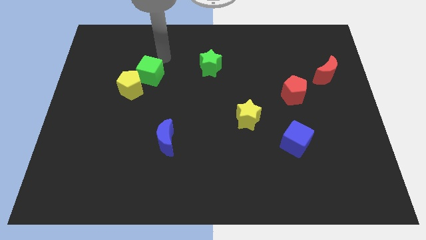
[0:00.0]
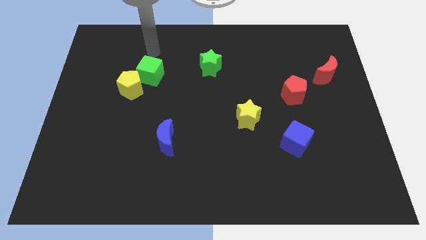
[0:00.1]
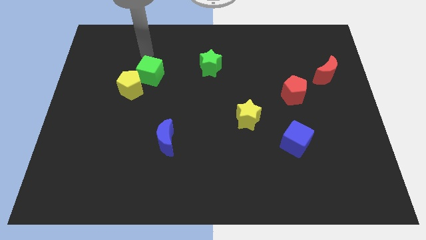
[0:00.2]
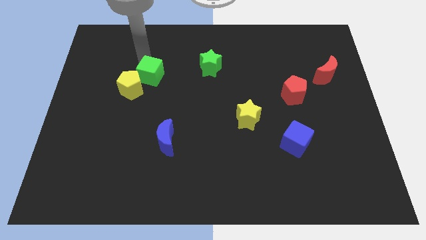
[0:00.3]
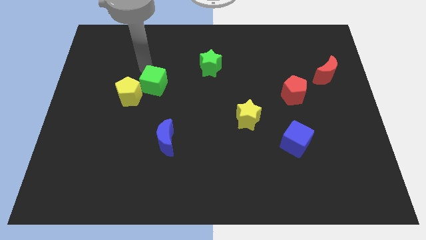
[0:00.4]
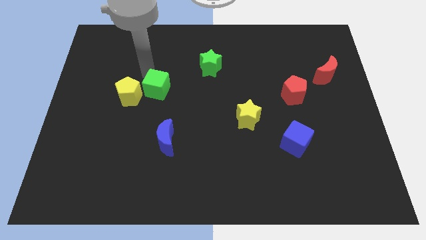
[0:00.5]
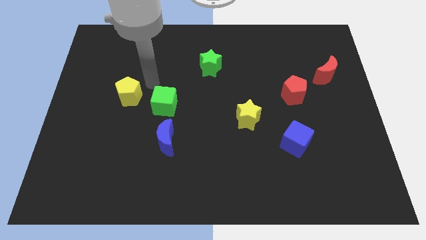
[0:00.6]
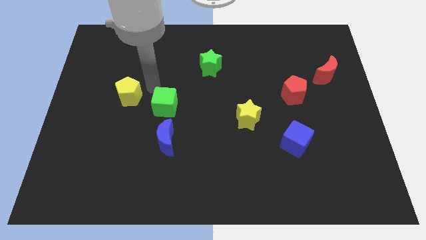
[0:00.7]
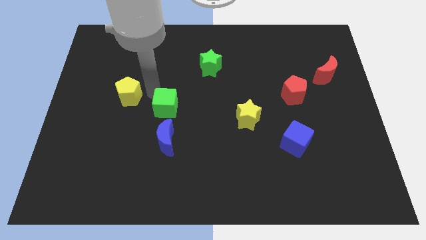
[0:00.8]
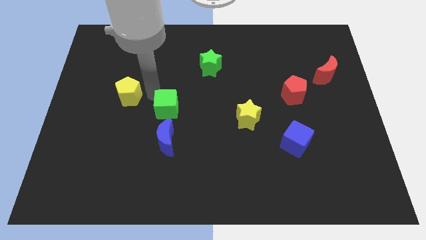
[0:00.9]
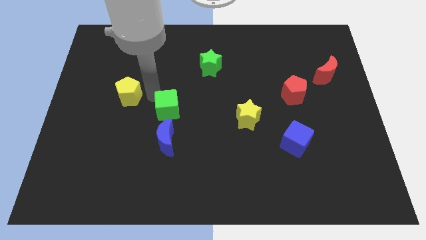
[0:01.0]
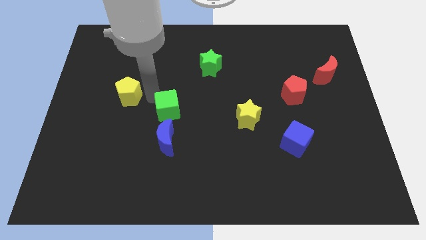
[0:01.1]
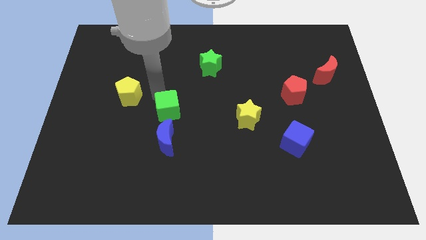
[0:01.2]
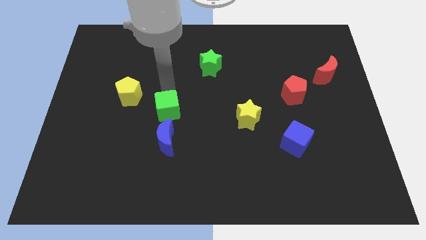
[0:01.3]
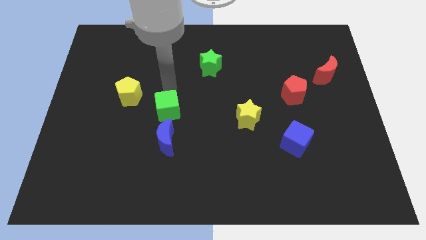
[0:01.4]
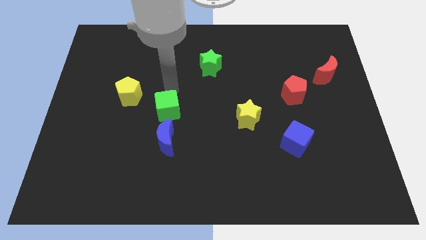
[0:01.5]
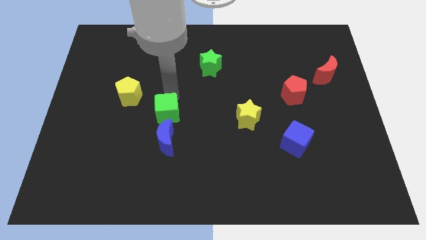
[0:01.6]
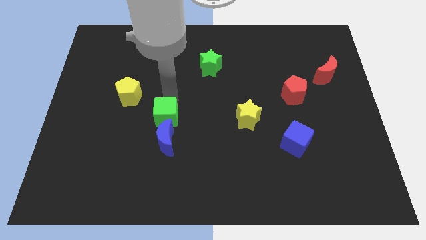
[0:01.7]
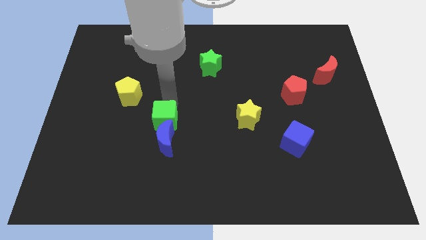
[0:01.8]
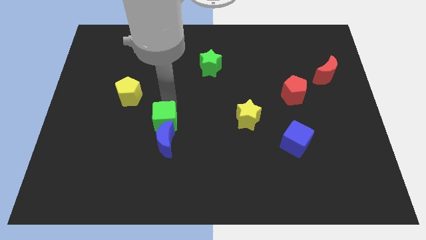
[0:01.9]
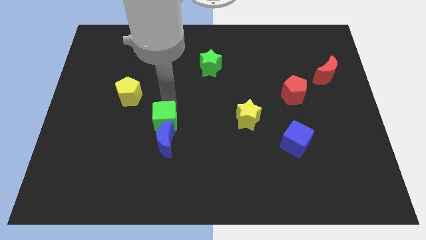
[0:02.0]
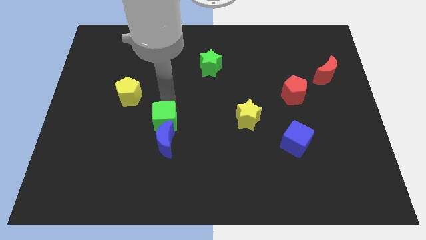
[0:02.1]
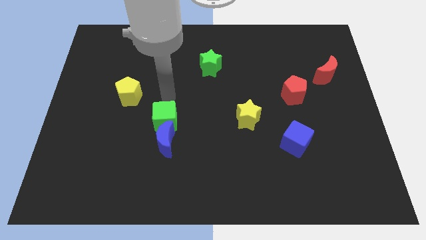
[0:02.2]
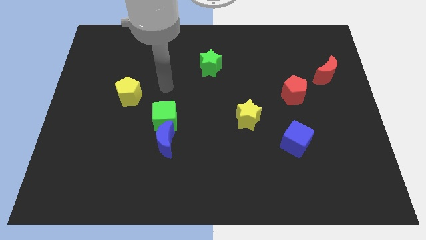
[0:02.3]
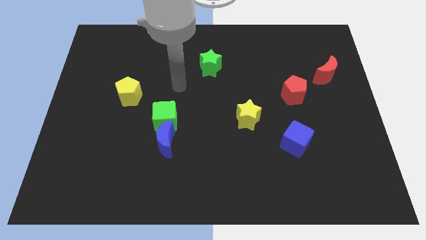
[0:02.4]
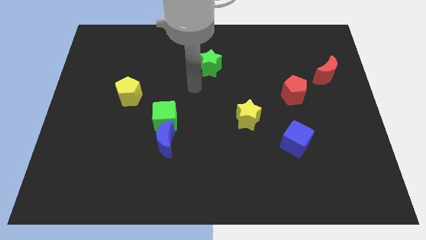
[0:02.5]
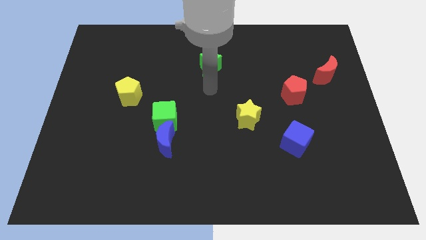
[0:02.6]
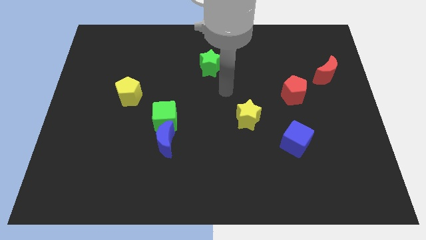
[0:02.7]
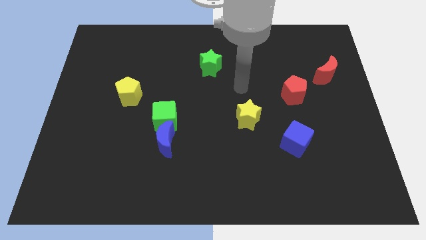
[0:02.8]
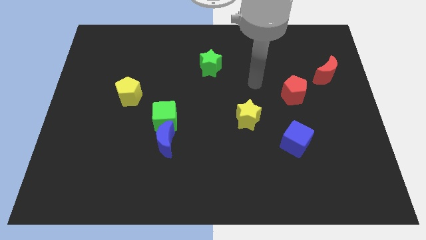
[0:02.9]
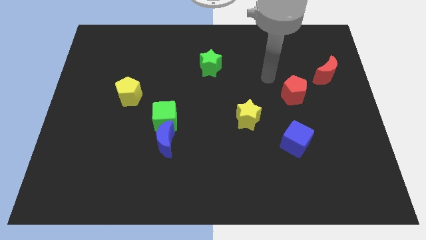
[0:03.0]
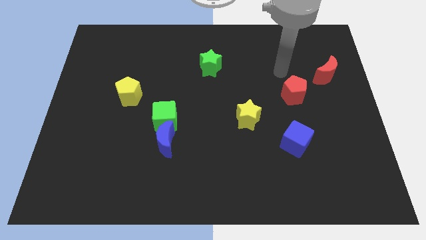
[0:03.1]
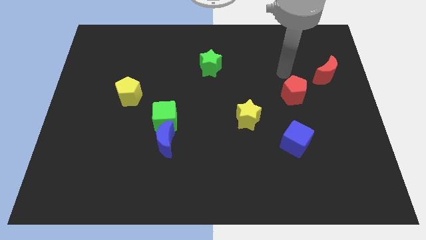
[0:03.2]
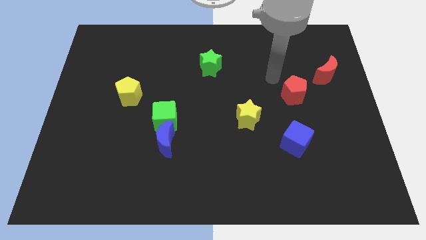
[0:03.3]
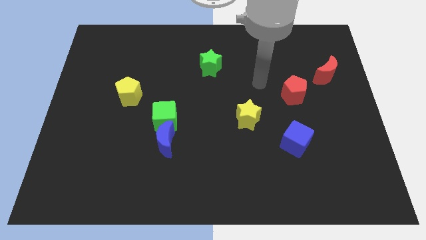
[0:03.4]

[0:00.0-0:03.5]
place green cube above the blue crescent

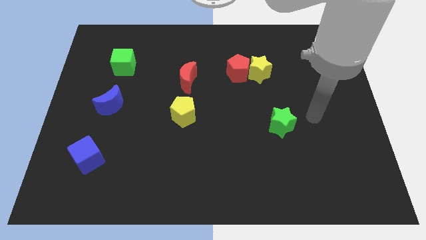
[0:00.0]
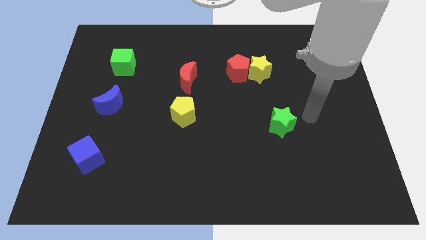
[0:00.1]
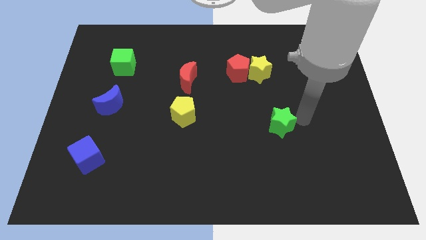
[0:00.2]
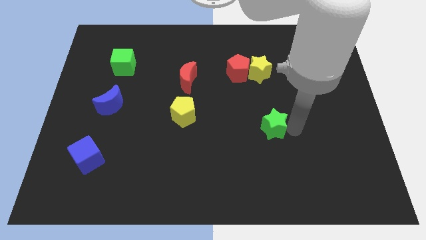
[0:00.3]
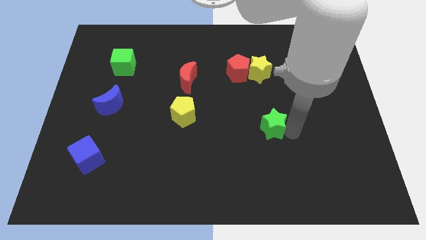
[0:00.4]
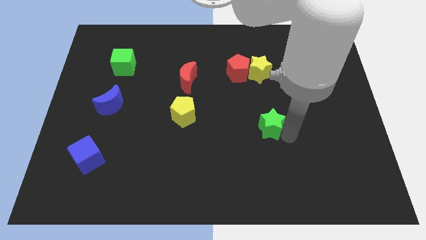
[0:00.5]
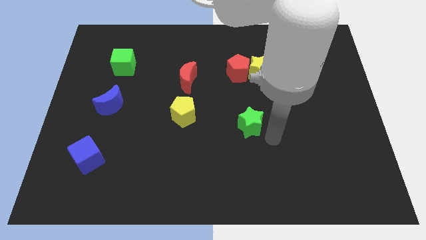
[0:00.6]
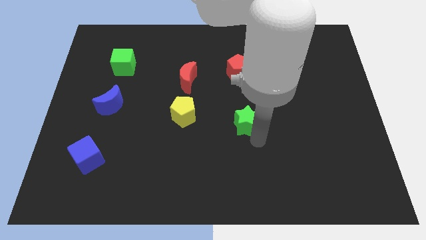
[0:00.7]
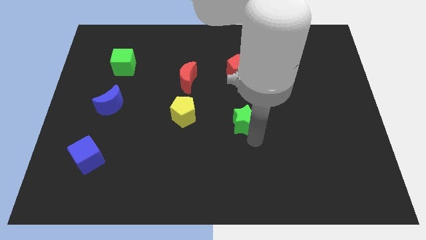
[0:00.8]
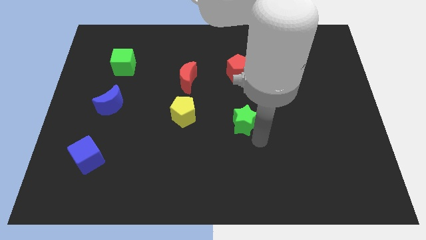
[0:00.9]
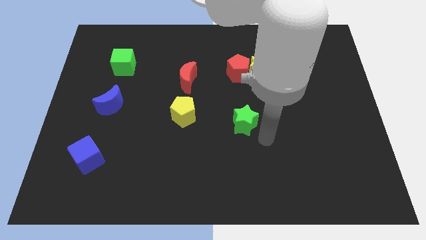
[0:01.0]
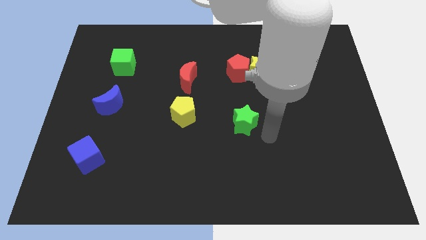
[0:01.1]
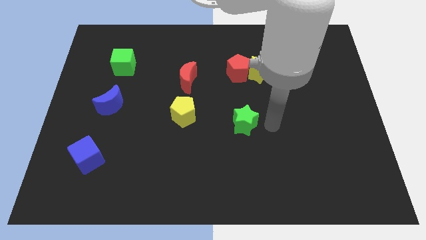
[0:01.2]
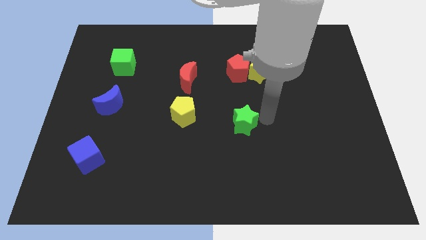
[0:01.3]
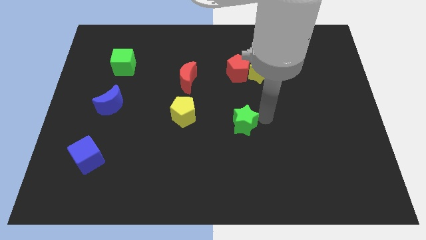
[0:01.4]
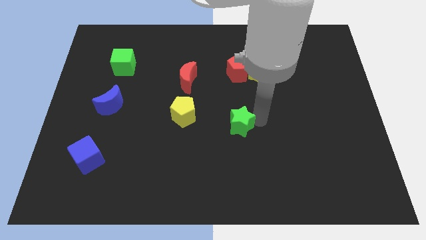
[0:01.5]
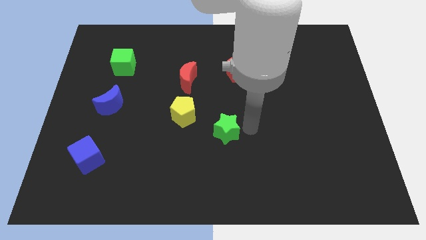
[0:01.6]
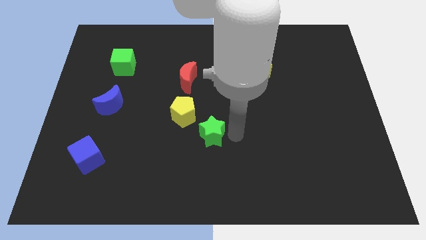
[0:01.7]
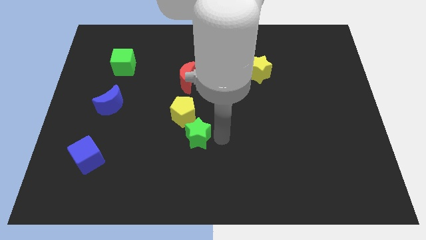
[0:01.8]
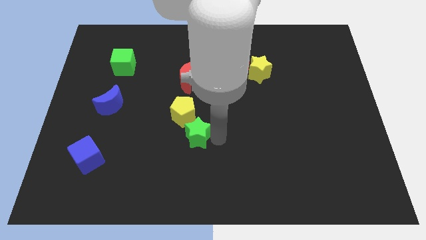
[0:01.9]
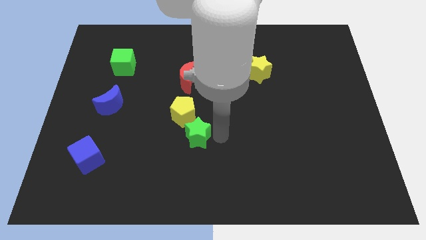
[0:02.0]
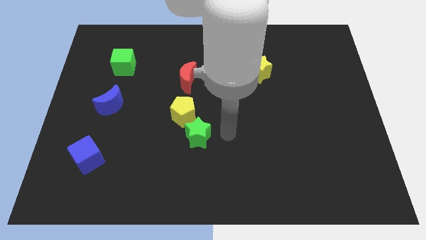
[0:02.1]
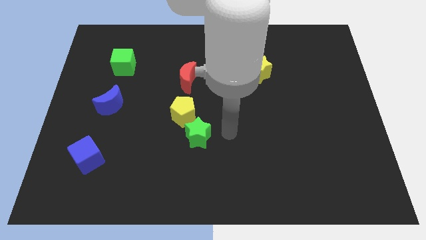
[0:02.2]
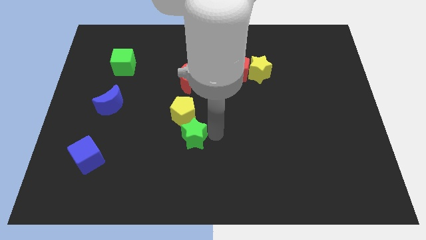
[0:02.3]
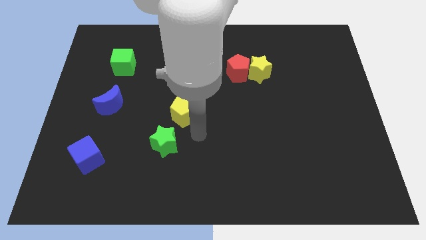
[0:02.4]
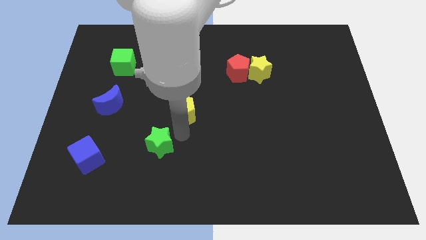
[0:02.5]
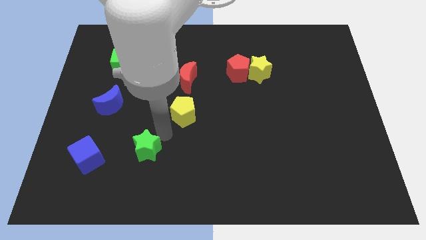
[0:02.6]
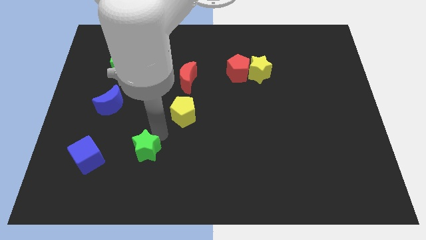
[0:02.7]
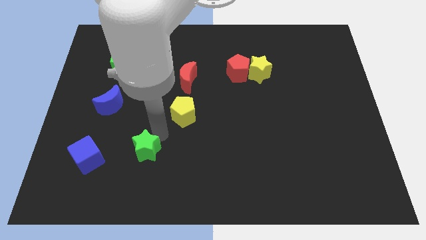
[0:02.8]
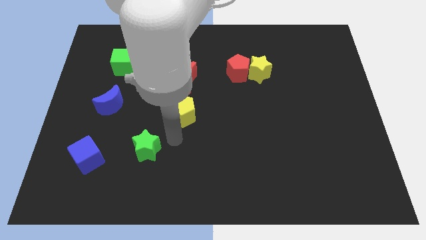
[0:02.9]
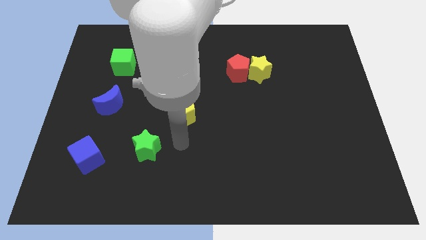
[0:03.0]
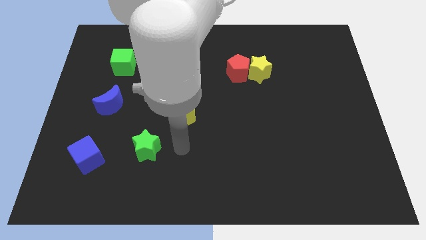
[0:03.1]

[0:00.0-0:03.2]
place the green star between blue block and yellow pentagon diagonally

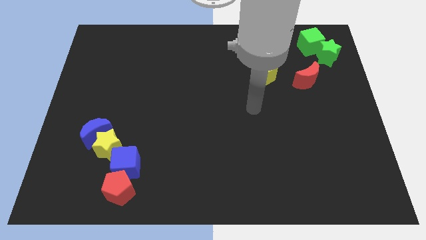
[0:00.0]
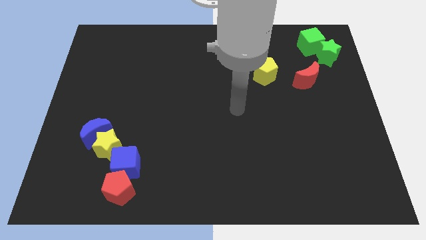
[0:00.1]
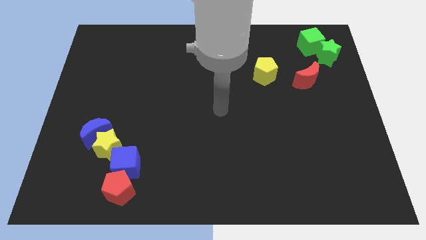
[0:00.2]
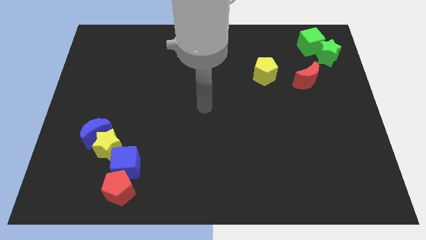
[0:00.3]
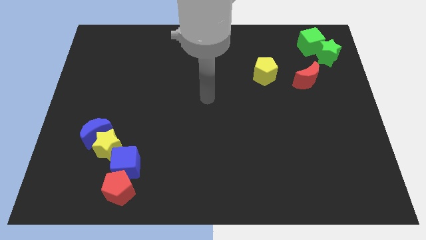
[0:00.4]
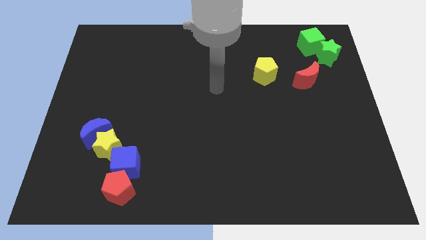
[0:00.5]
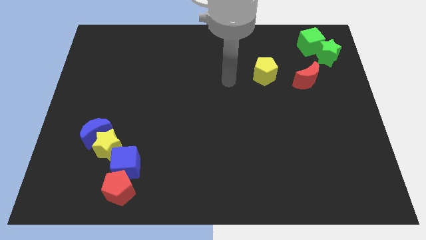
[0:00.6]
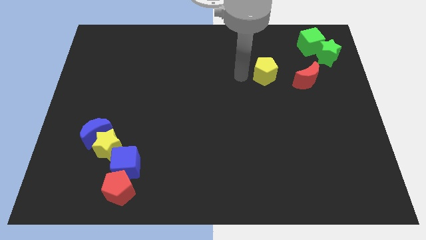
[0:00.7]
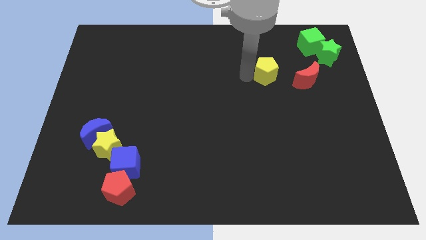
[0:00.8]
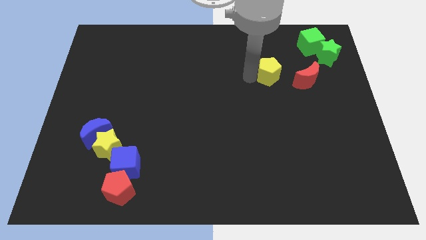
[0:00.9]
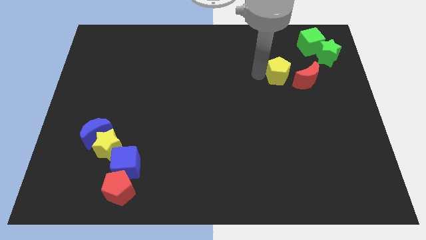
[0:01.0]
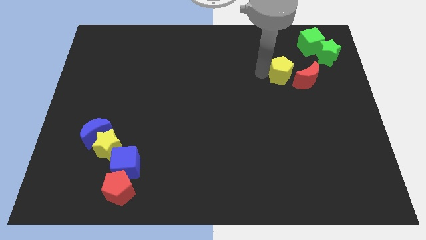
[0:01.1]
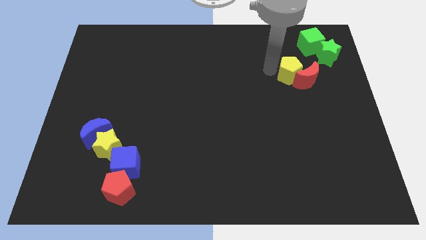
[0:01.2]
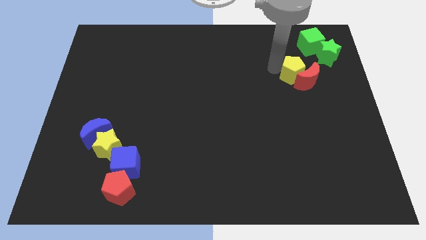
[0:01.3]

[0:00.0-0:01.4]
move the yellow pentagon into the red crescent

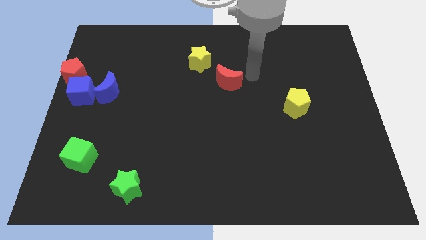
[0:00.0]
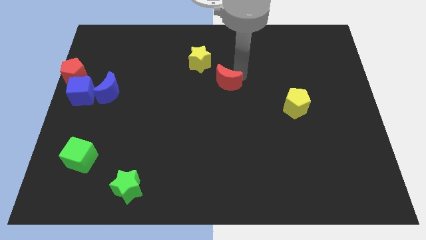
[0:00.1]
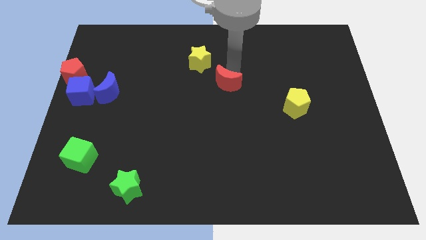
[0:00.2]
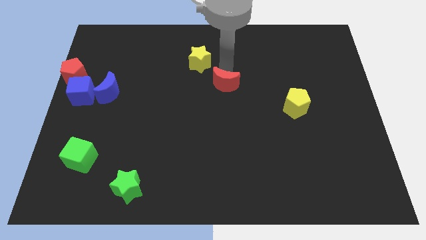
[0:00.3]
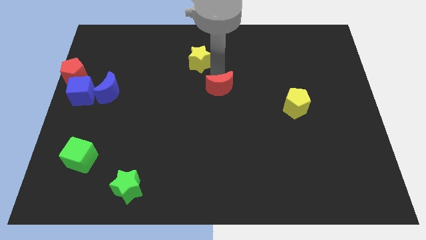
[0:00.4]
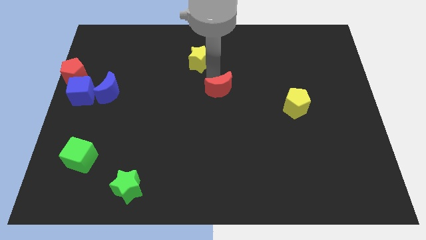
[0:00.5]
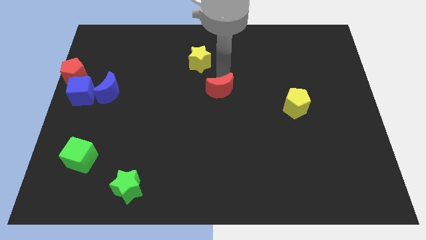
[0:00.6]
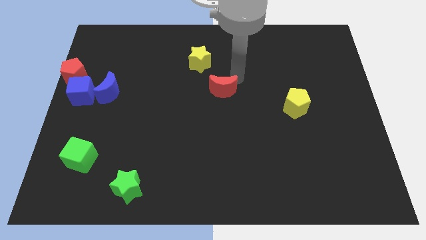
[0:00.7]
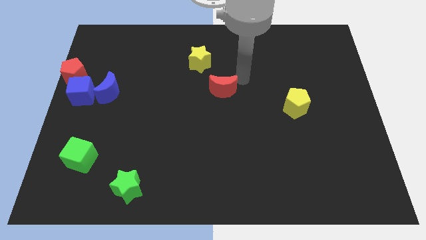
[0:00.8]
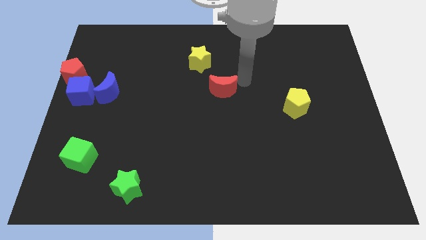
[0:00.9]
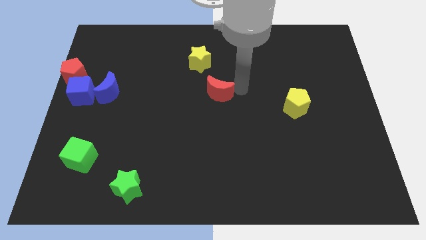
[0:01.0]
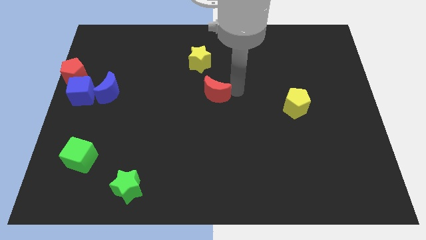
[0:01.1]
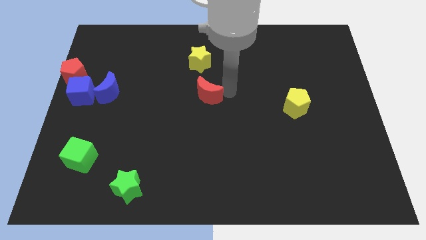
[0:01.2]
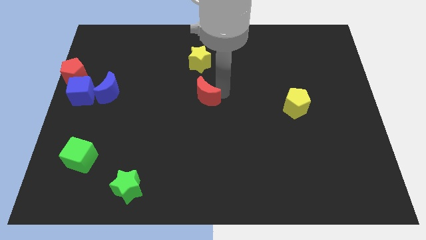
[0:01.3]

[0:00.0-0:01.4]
push the red crescent to the center of the board
